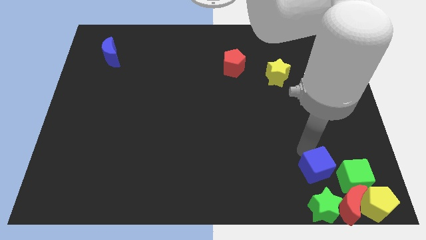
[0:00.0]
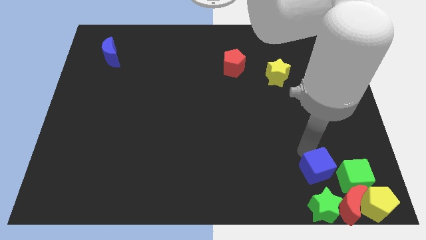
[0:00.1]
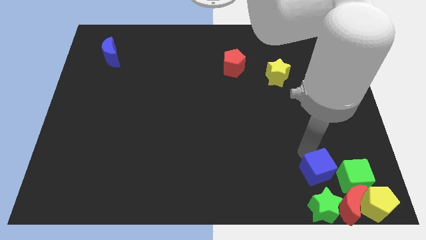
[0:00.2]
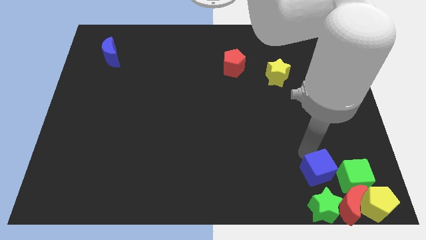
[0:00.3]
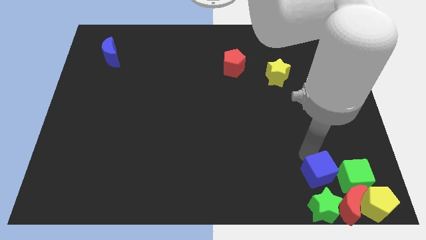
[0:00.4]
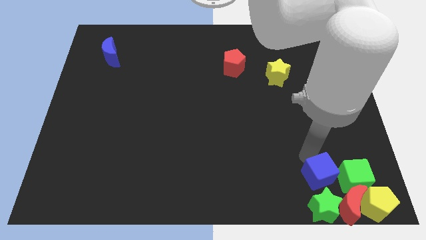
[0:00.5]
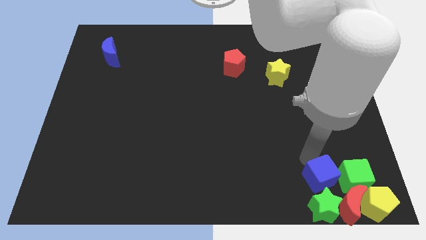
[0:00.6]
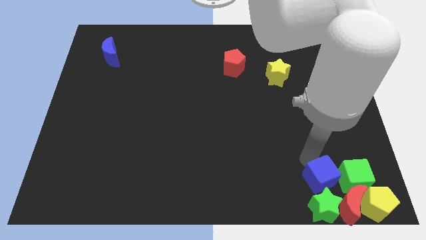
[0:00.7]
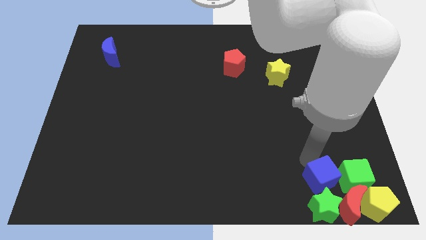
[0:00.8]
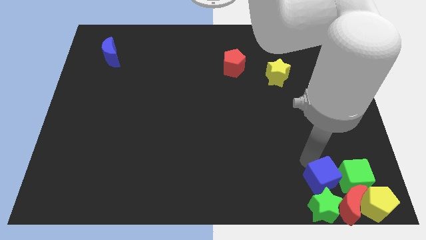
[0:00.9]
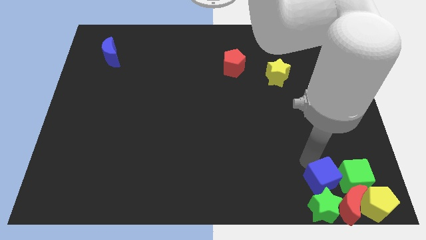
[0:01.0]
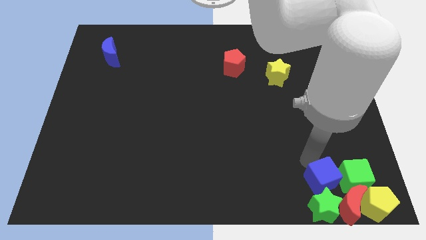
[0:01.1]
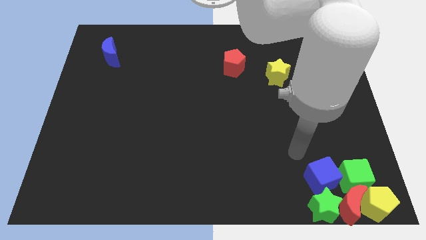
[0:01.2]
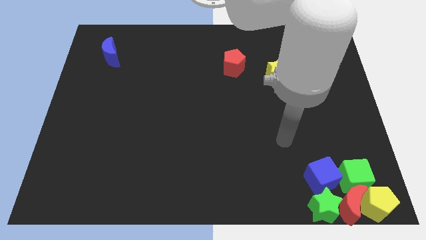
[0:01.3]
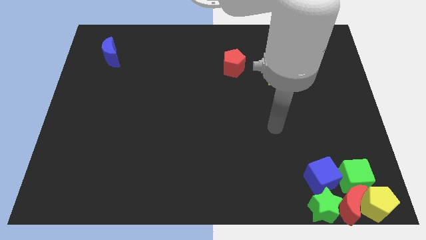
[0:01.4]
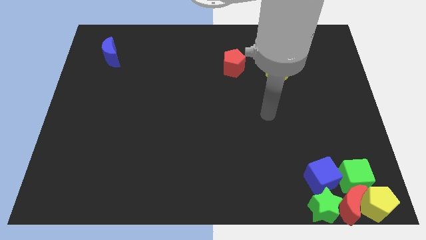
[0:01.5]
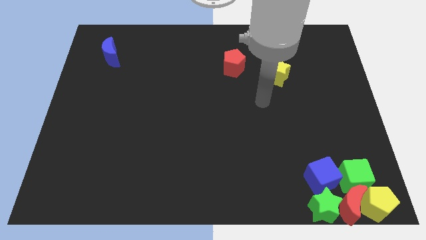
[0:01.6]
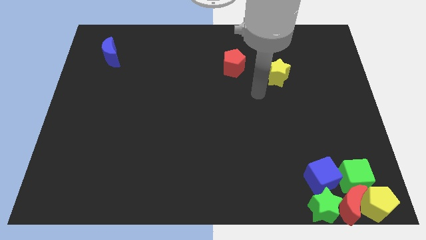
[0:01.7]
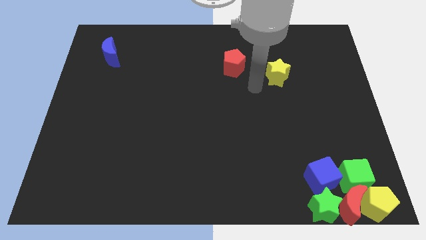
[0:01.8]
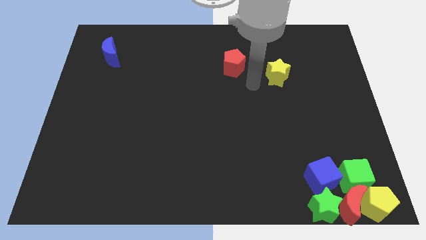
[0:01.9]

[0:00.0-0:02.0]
push the blue cube into the group of blocks

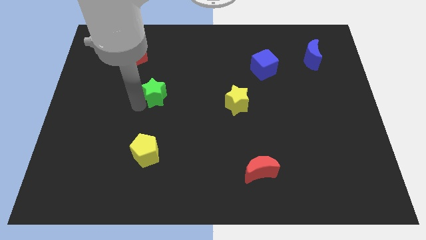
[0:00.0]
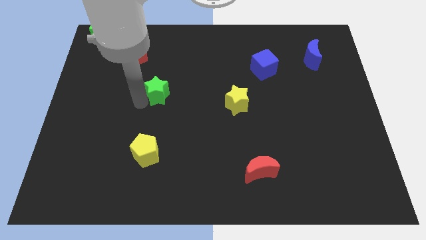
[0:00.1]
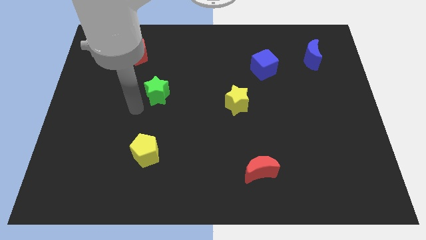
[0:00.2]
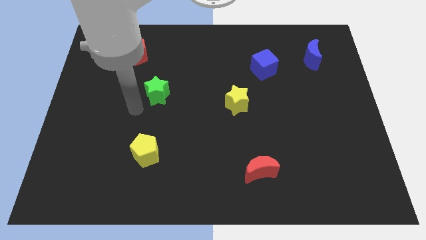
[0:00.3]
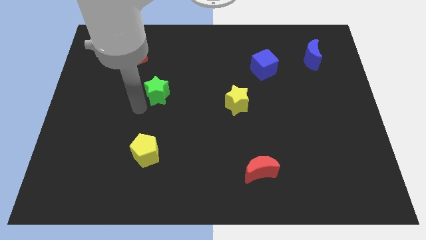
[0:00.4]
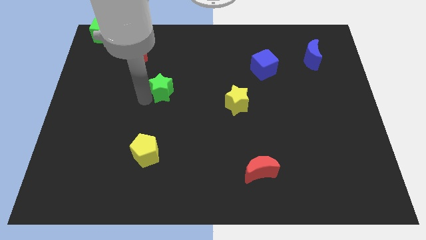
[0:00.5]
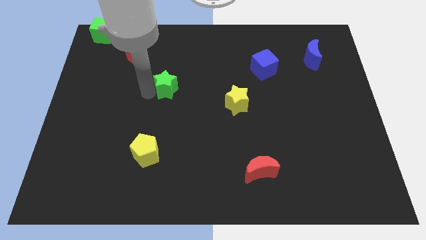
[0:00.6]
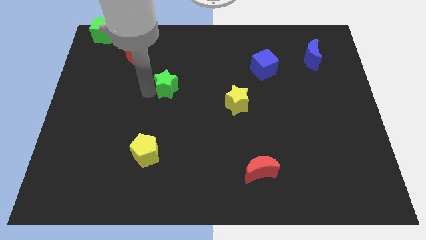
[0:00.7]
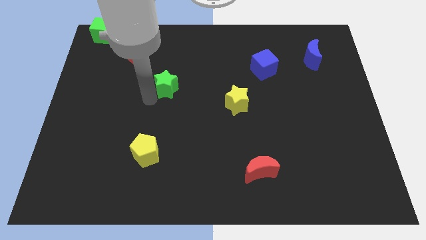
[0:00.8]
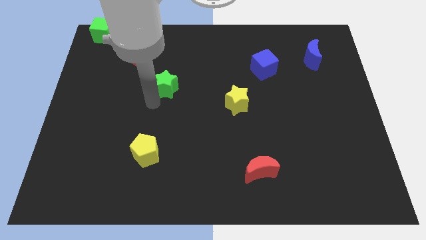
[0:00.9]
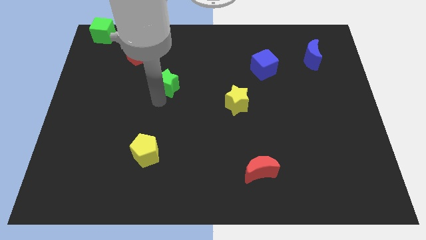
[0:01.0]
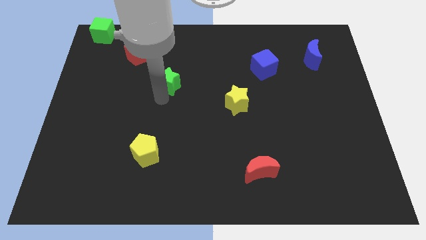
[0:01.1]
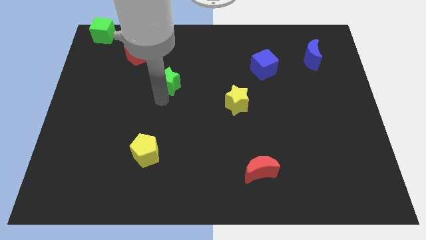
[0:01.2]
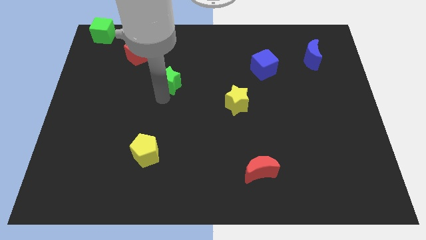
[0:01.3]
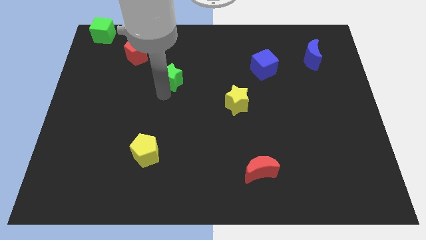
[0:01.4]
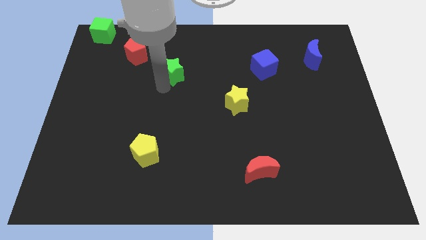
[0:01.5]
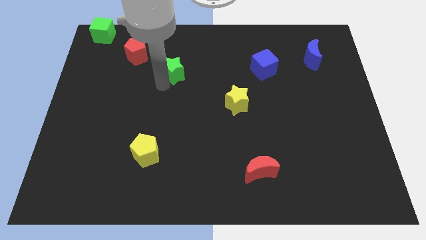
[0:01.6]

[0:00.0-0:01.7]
push the green star in between the red pentagon and yellow star

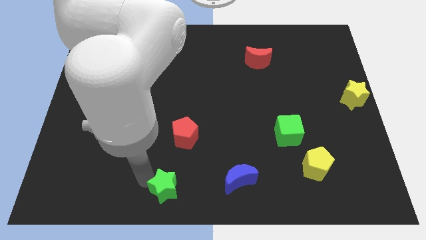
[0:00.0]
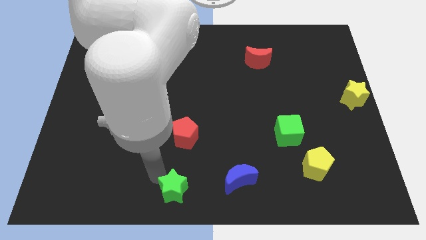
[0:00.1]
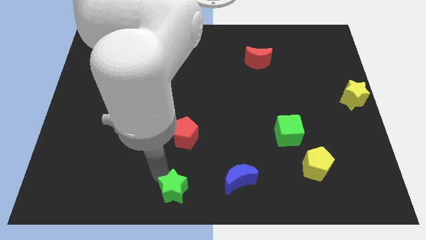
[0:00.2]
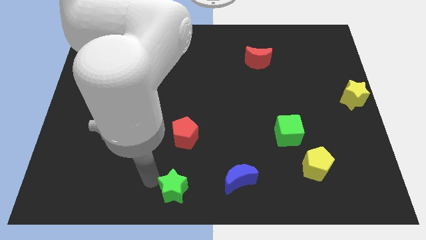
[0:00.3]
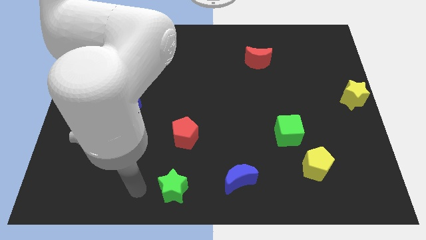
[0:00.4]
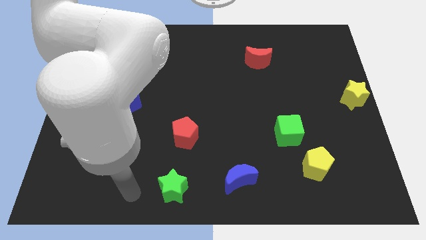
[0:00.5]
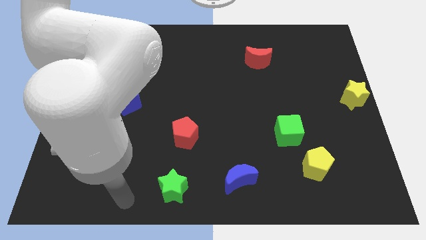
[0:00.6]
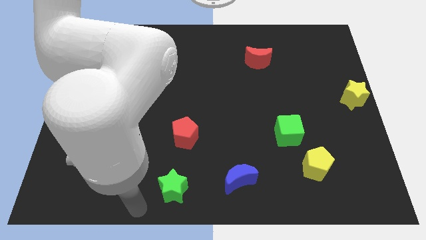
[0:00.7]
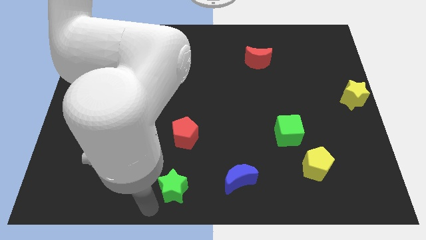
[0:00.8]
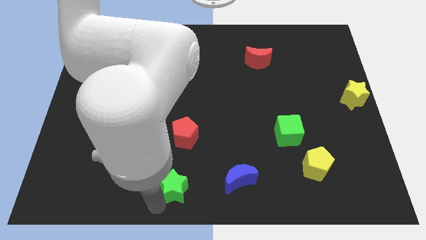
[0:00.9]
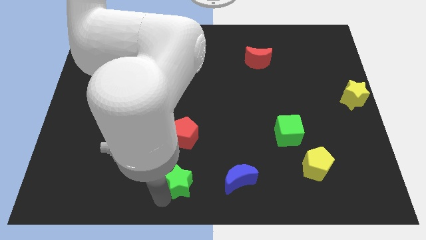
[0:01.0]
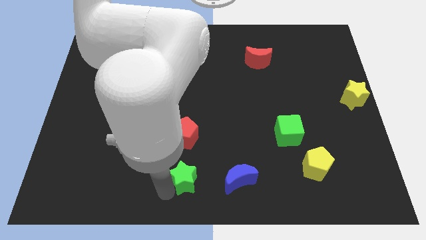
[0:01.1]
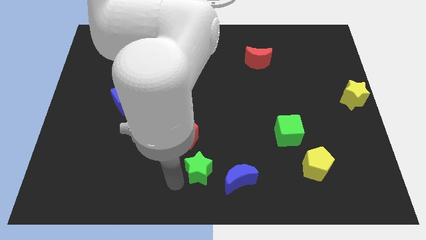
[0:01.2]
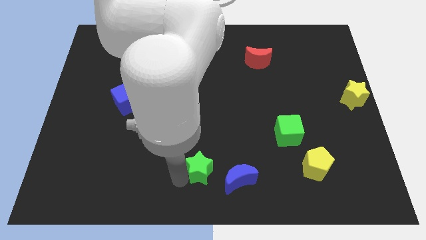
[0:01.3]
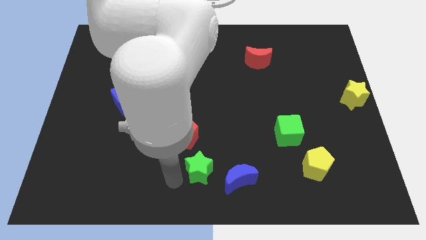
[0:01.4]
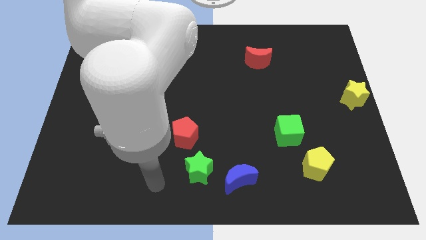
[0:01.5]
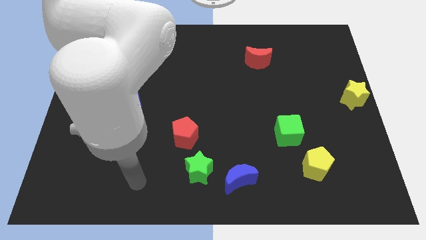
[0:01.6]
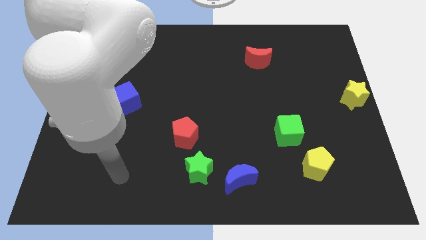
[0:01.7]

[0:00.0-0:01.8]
place the green star below the red pentagon

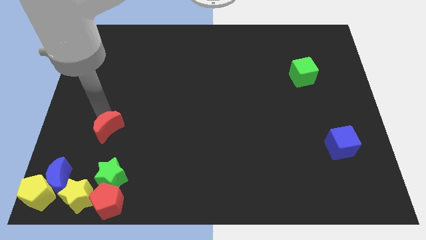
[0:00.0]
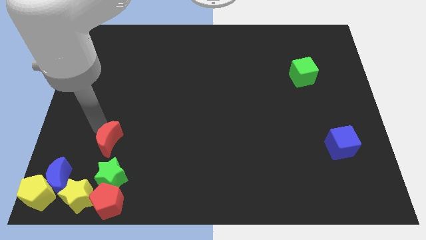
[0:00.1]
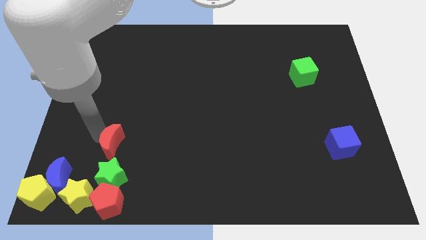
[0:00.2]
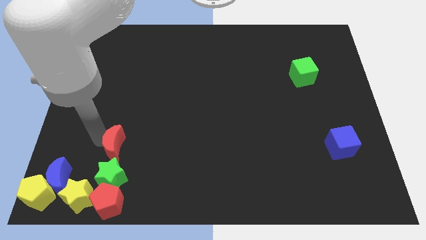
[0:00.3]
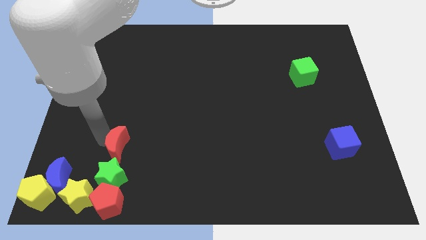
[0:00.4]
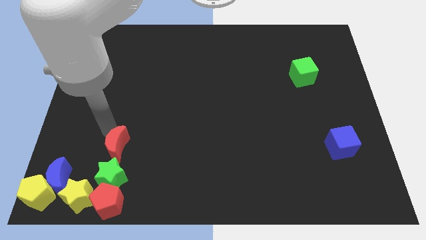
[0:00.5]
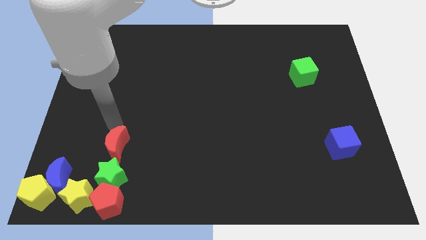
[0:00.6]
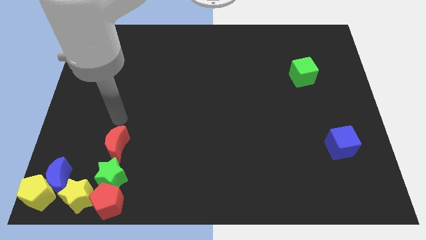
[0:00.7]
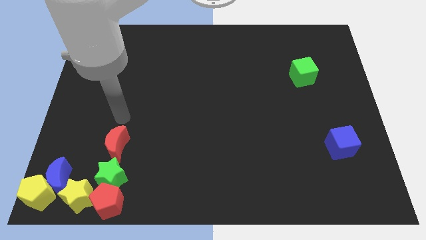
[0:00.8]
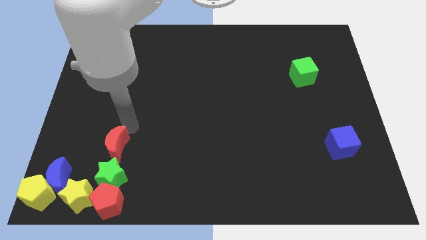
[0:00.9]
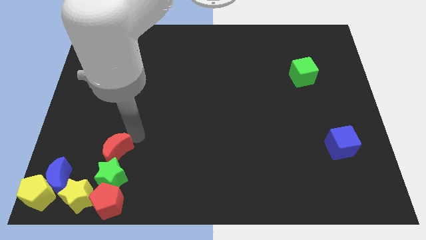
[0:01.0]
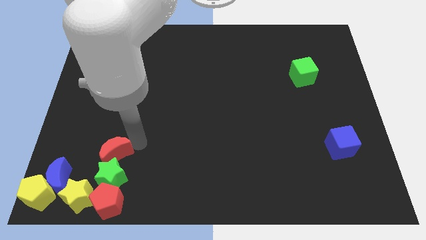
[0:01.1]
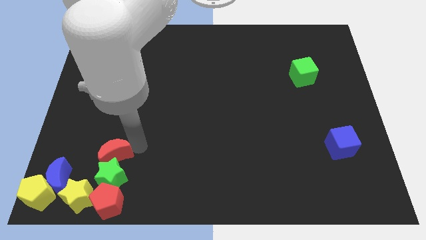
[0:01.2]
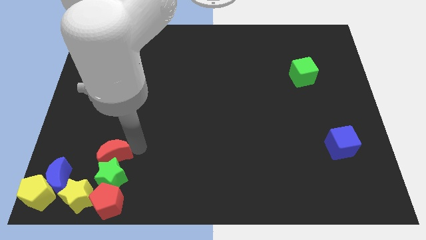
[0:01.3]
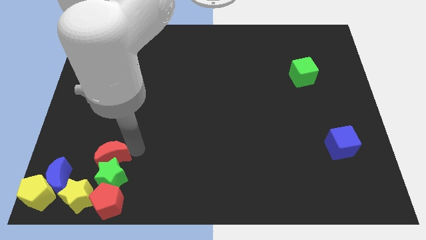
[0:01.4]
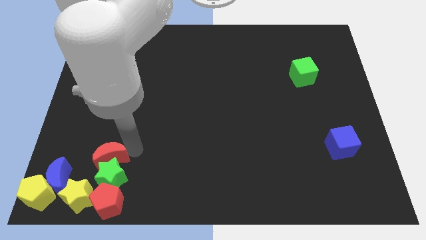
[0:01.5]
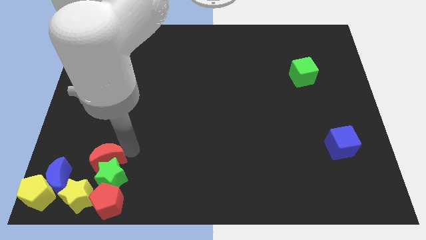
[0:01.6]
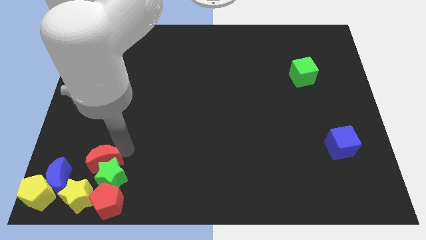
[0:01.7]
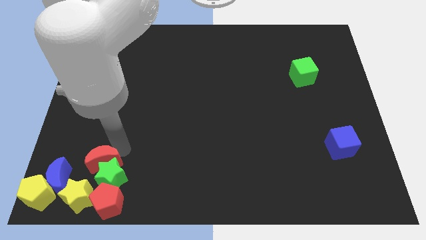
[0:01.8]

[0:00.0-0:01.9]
move the red crescent towards the top side of the green star

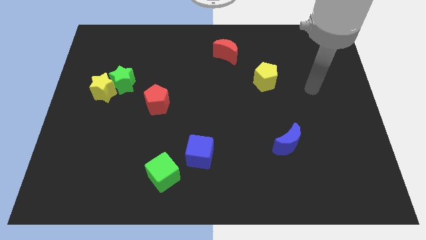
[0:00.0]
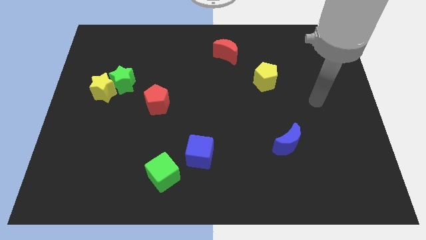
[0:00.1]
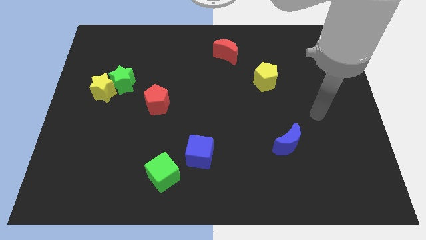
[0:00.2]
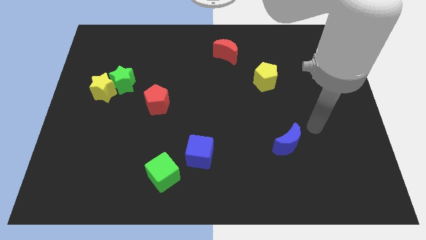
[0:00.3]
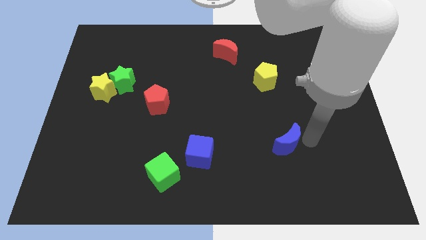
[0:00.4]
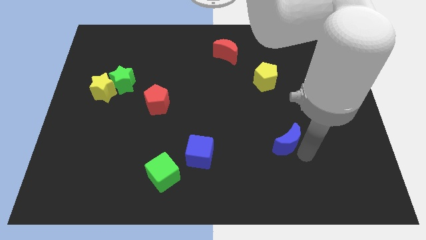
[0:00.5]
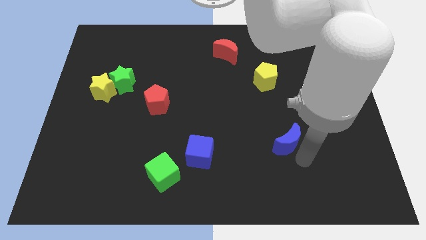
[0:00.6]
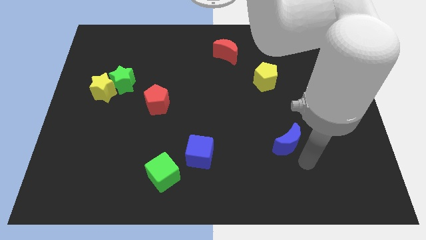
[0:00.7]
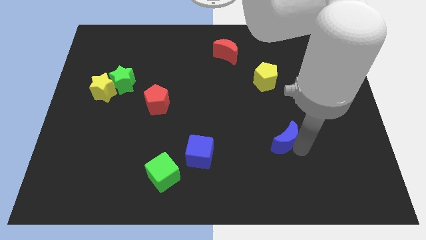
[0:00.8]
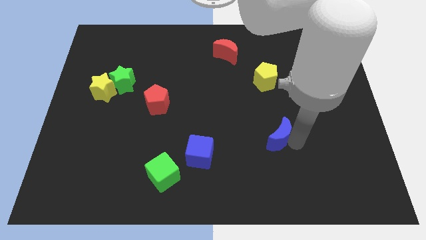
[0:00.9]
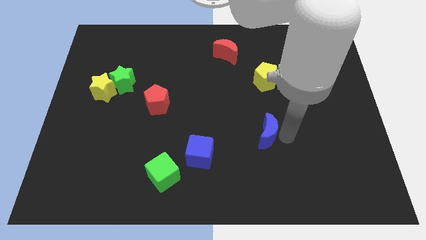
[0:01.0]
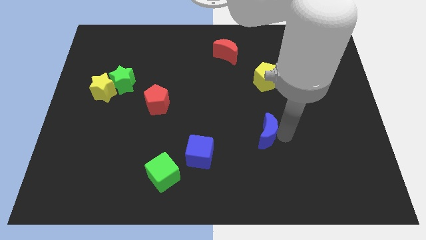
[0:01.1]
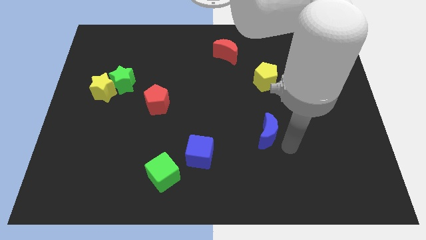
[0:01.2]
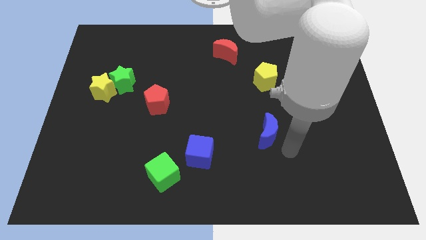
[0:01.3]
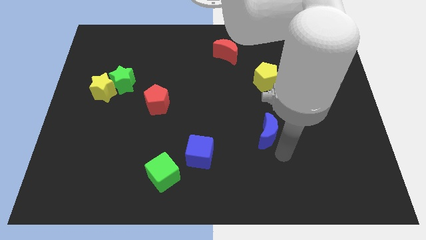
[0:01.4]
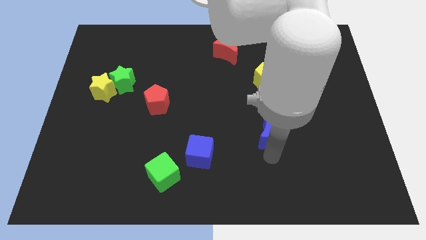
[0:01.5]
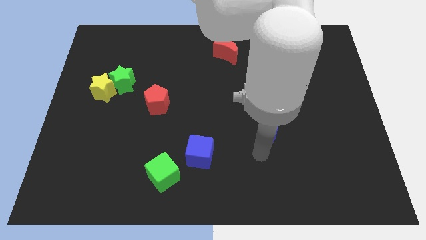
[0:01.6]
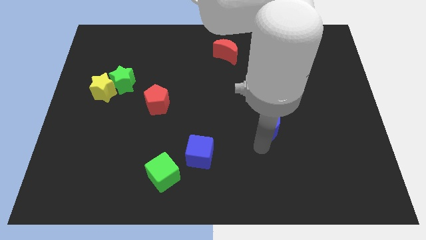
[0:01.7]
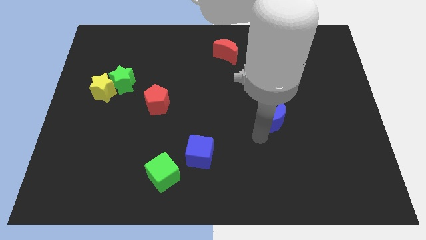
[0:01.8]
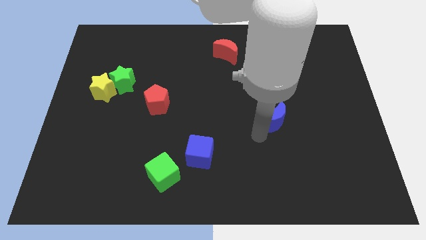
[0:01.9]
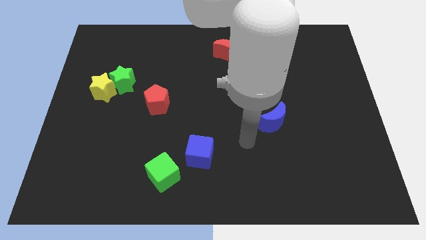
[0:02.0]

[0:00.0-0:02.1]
push the blue crescent towards the yellow pentagon
